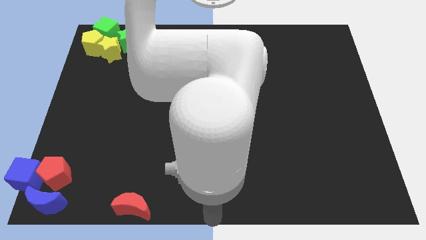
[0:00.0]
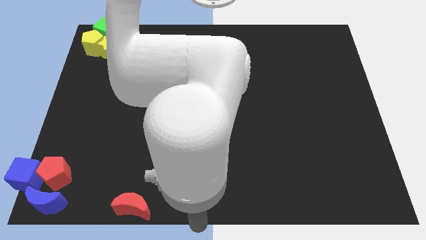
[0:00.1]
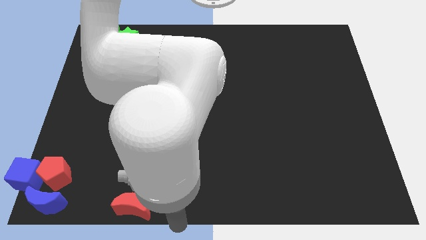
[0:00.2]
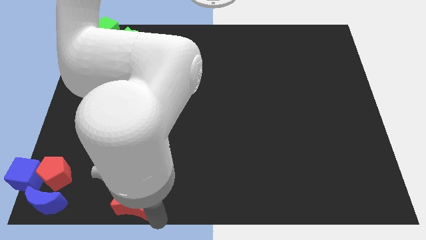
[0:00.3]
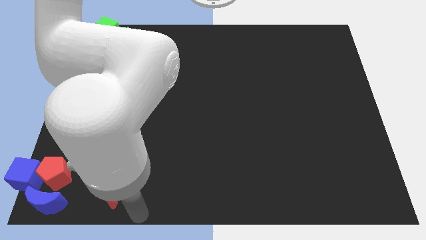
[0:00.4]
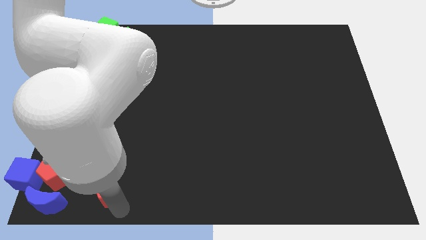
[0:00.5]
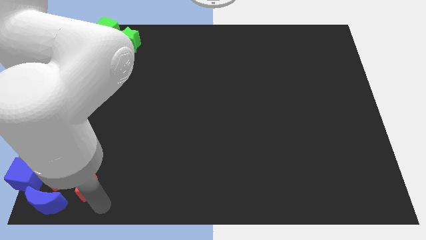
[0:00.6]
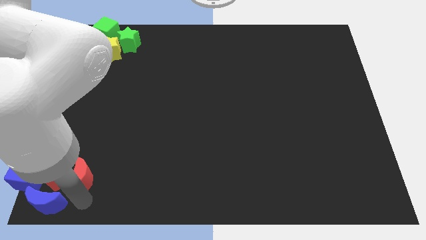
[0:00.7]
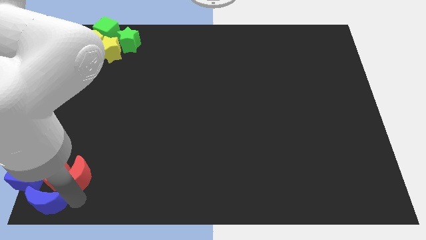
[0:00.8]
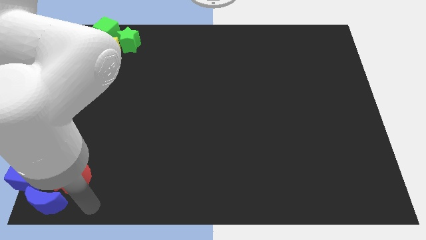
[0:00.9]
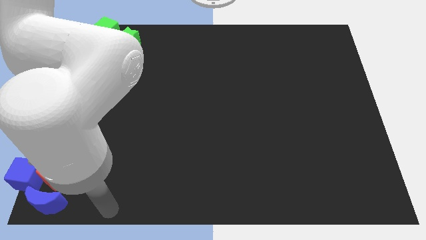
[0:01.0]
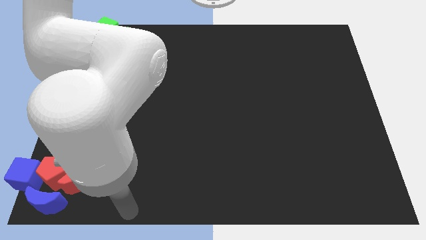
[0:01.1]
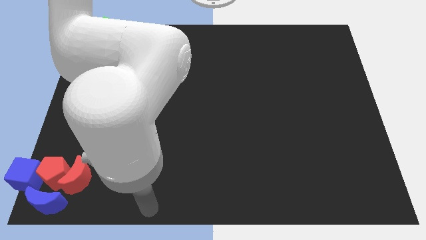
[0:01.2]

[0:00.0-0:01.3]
move the red crescent to the red pentagon

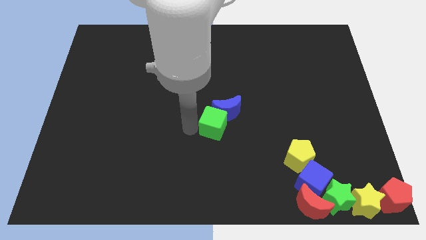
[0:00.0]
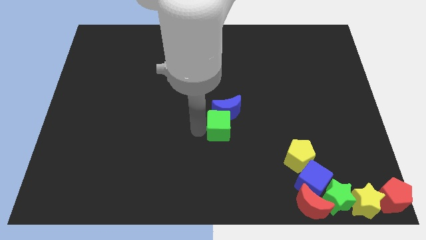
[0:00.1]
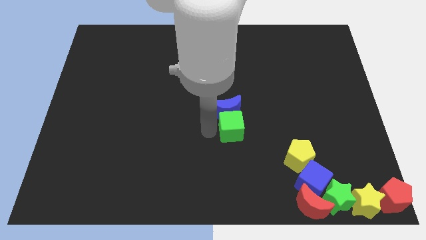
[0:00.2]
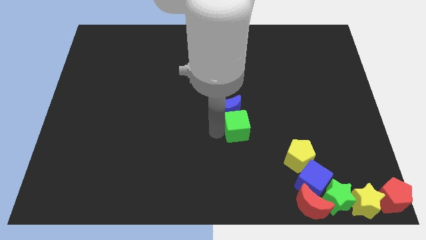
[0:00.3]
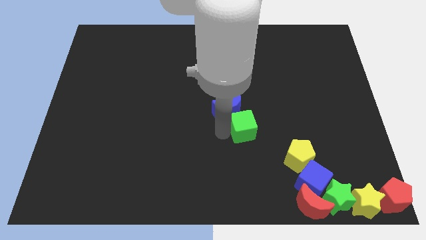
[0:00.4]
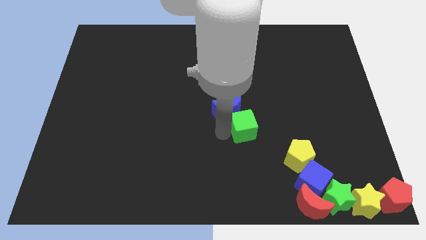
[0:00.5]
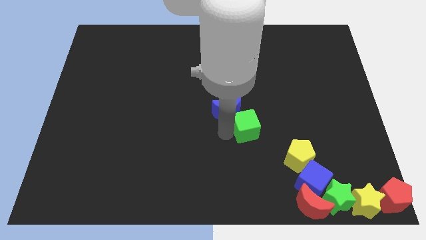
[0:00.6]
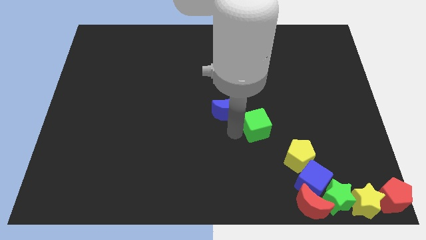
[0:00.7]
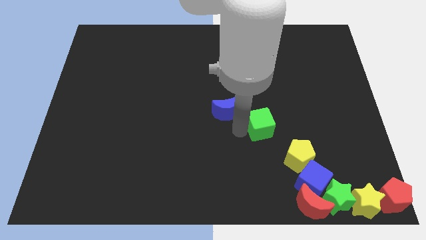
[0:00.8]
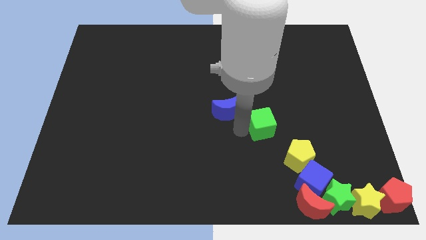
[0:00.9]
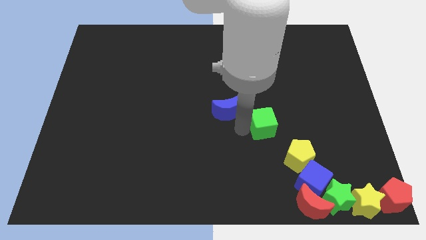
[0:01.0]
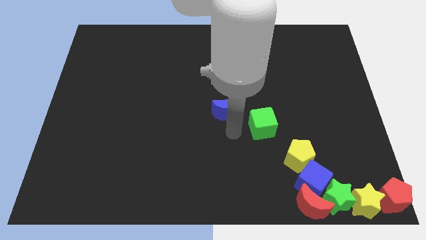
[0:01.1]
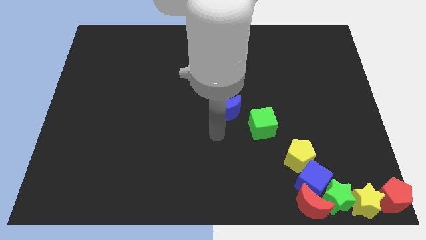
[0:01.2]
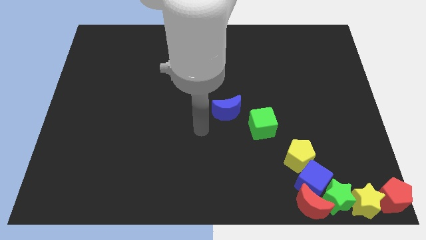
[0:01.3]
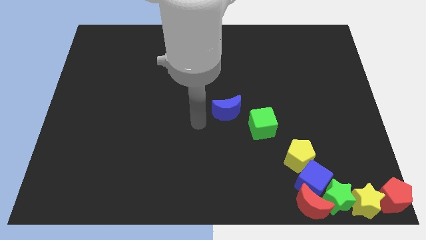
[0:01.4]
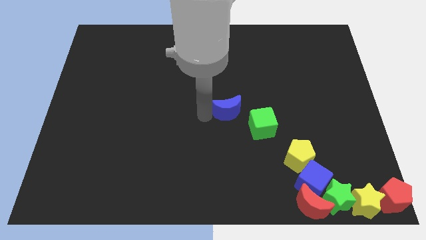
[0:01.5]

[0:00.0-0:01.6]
place the green cube diagonally in between the blue moon and the yellow pentagon

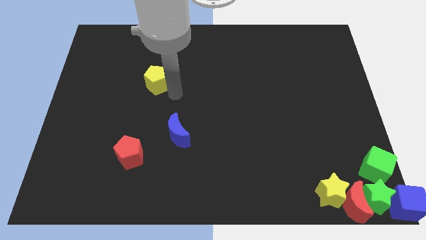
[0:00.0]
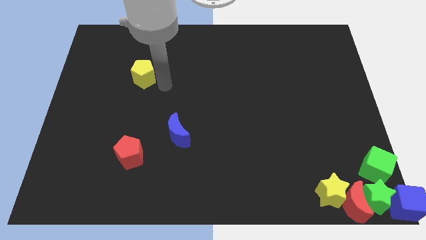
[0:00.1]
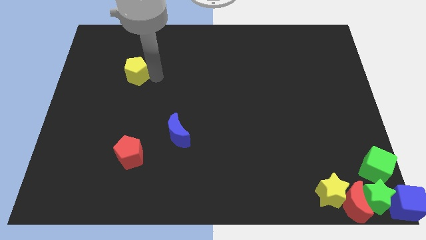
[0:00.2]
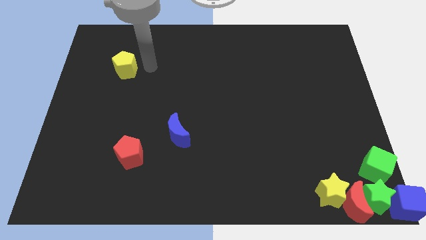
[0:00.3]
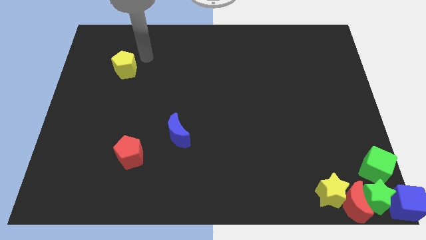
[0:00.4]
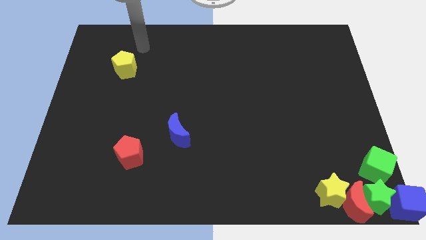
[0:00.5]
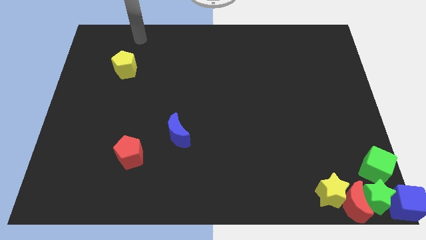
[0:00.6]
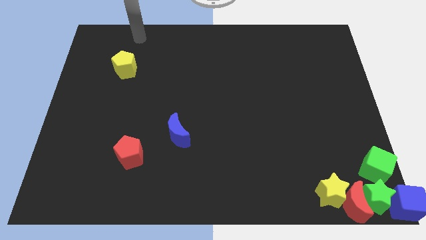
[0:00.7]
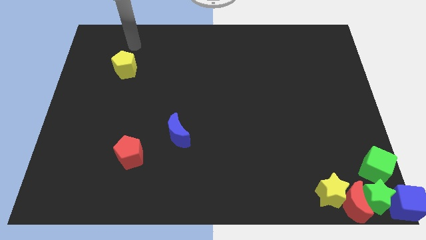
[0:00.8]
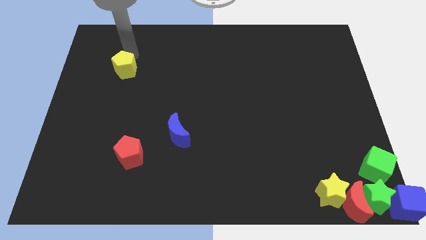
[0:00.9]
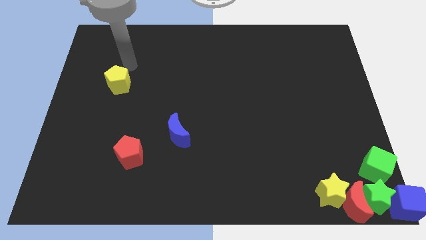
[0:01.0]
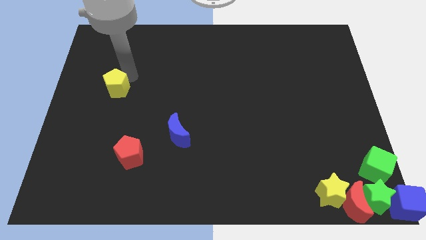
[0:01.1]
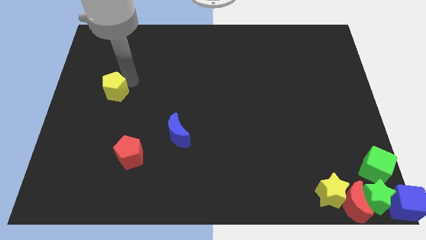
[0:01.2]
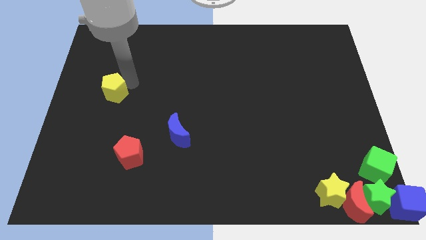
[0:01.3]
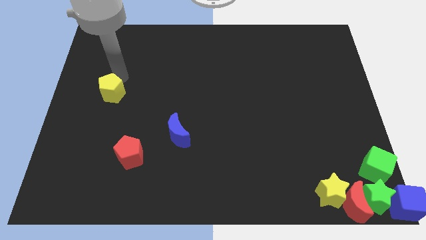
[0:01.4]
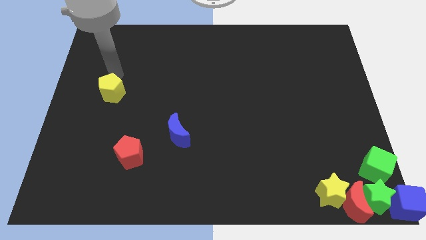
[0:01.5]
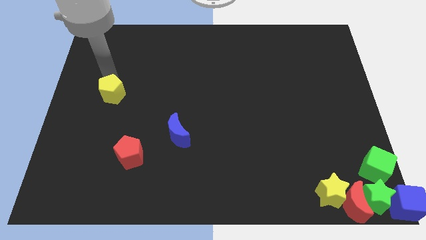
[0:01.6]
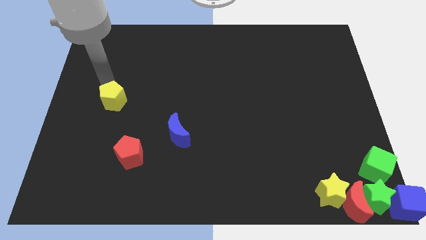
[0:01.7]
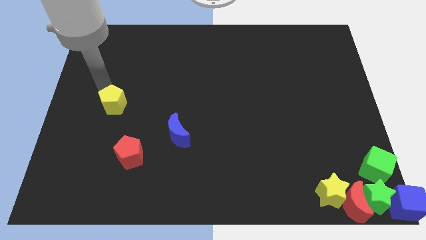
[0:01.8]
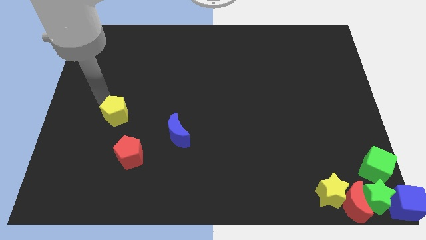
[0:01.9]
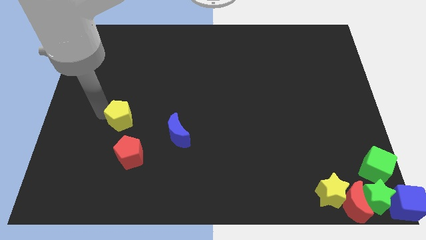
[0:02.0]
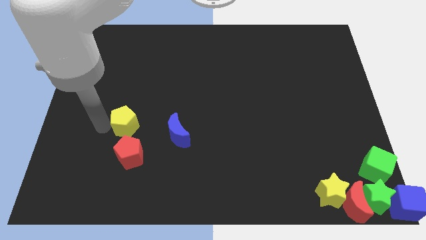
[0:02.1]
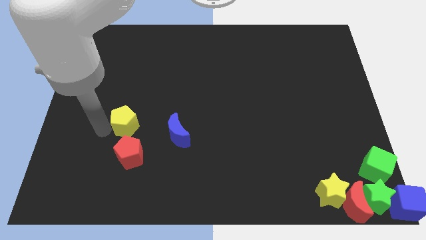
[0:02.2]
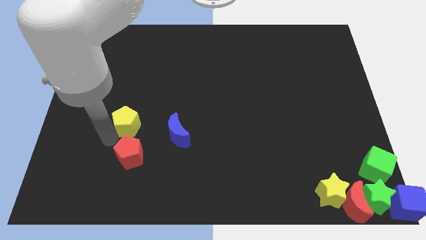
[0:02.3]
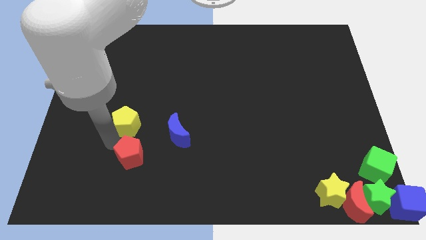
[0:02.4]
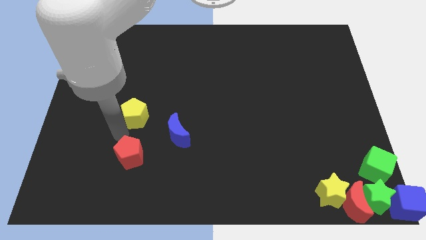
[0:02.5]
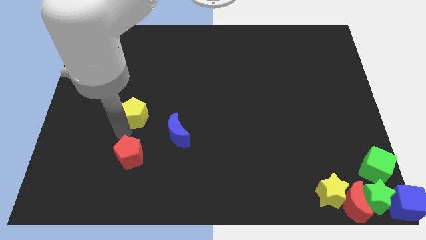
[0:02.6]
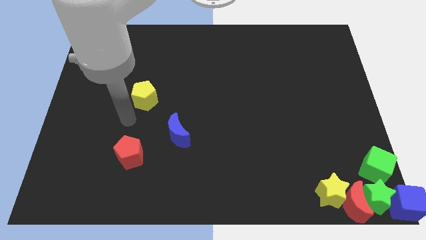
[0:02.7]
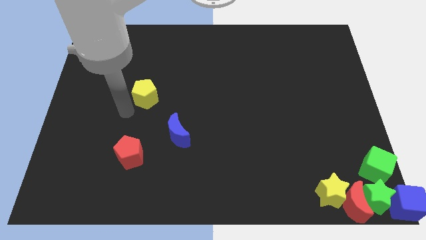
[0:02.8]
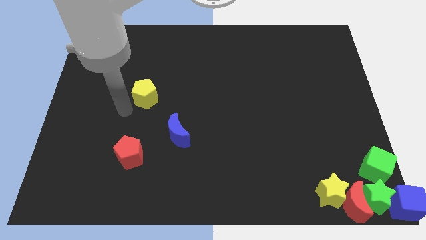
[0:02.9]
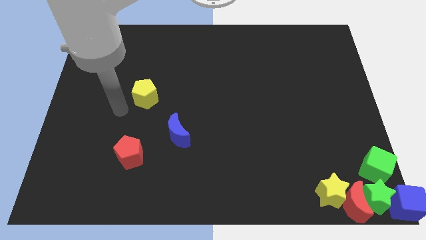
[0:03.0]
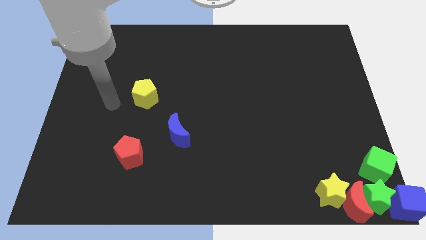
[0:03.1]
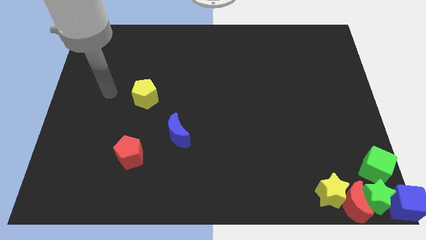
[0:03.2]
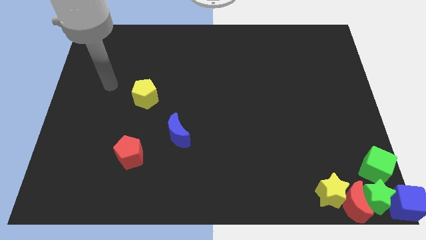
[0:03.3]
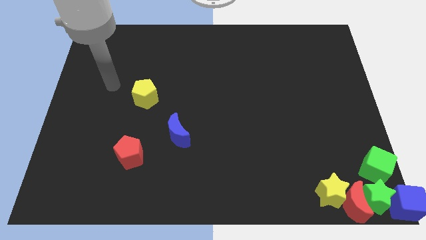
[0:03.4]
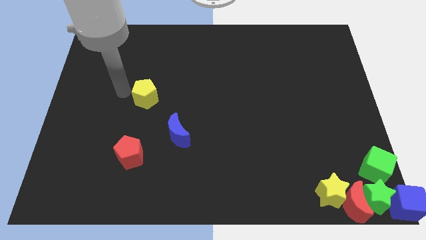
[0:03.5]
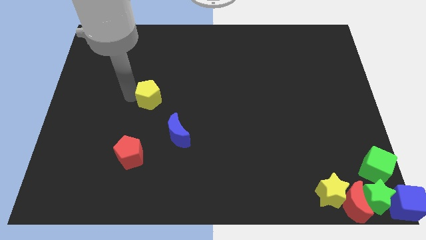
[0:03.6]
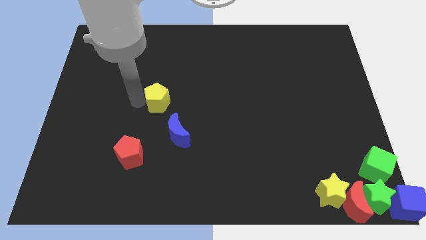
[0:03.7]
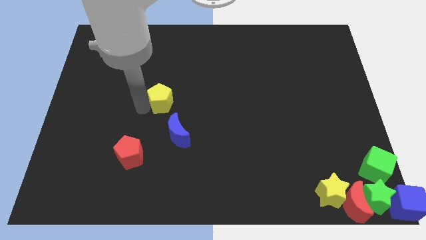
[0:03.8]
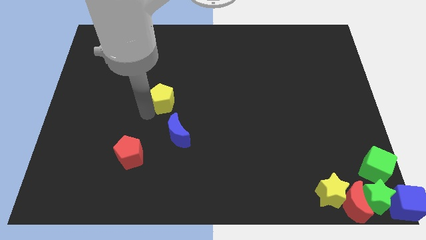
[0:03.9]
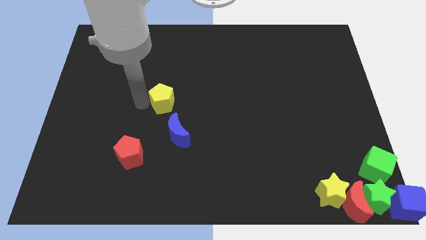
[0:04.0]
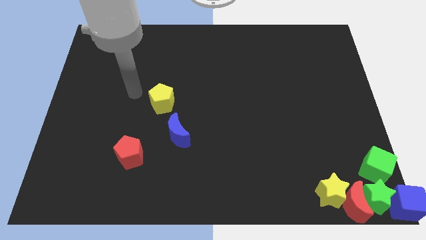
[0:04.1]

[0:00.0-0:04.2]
move the yellow pentagon to the top left side of the blue crescent

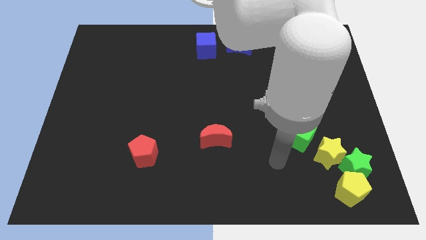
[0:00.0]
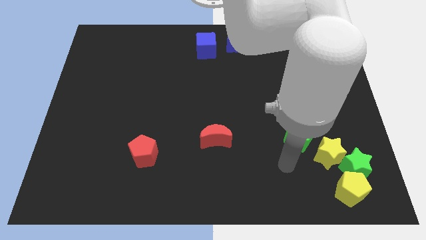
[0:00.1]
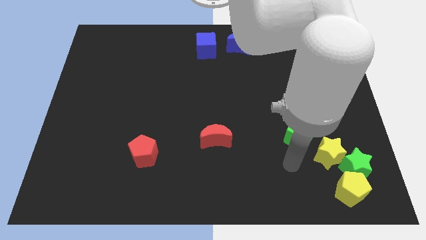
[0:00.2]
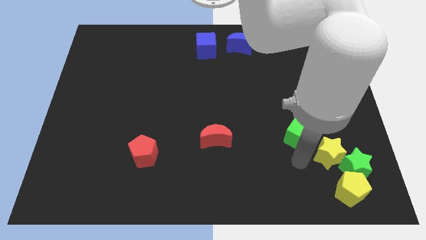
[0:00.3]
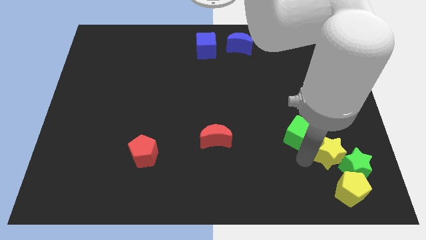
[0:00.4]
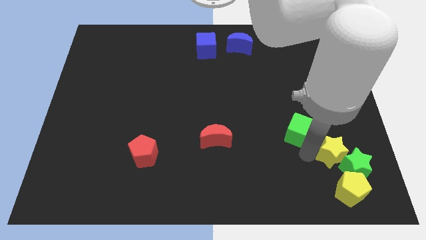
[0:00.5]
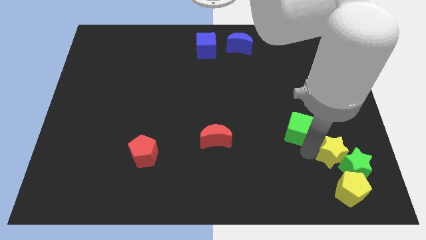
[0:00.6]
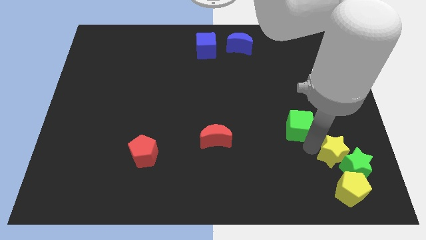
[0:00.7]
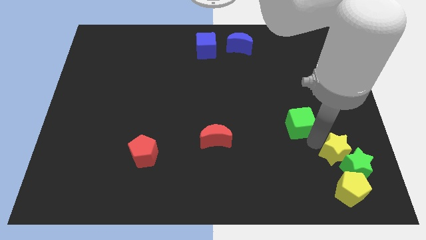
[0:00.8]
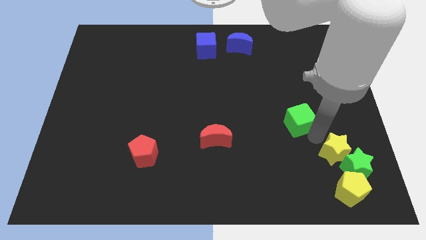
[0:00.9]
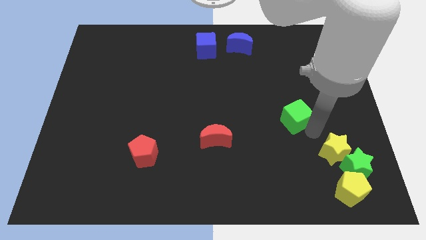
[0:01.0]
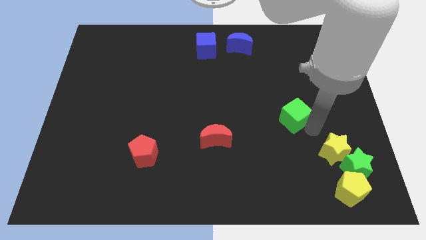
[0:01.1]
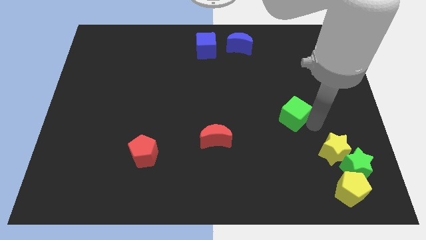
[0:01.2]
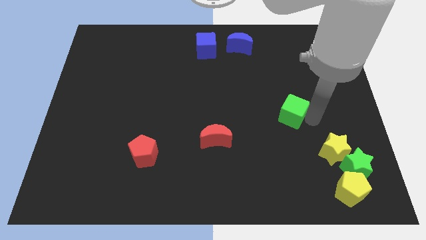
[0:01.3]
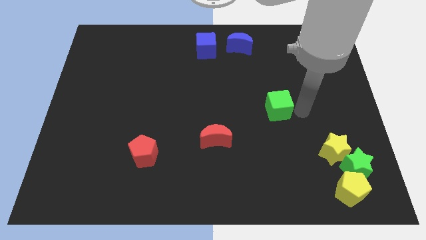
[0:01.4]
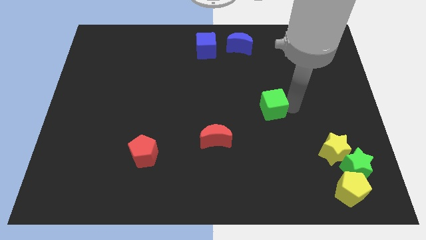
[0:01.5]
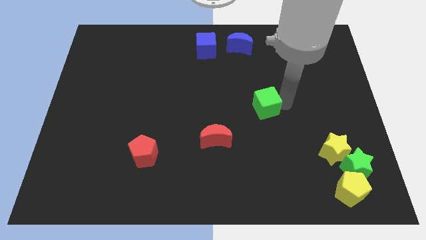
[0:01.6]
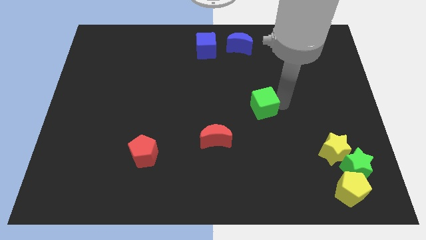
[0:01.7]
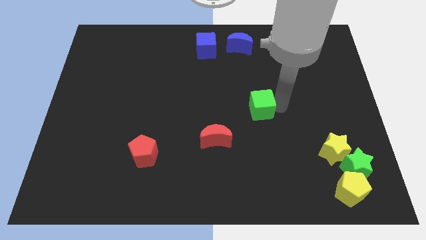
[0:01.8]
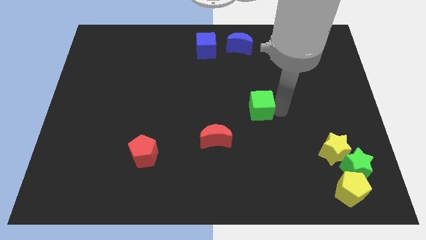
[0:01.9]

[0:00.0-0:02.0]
move the green cube diagonally top right to the red crescent
